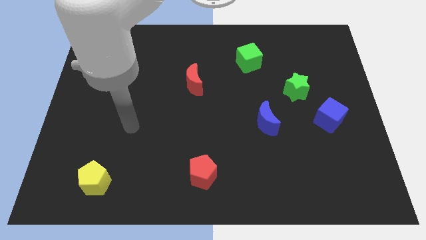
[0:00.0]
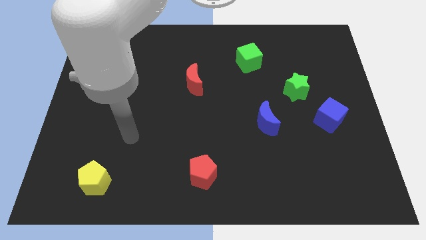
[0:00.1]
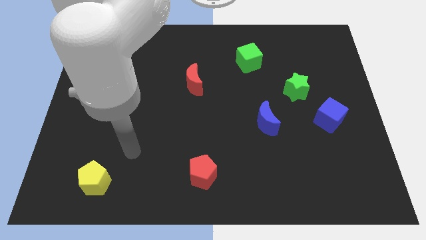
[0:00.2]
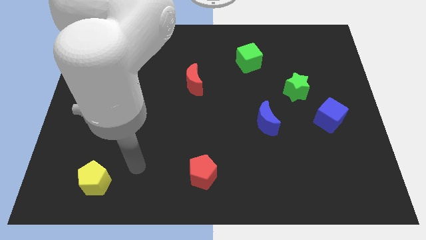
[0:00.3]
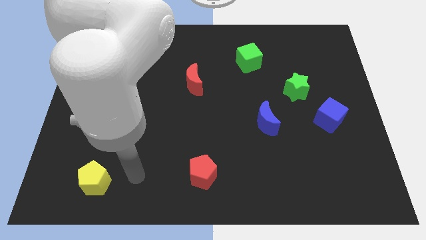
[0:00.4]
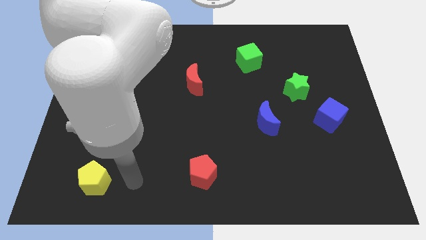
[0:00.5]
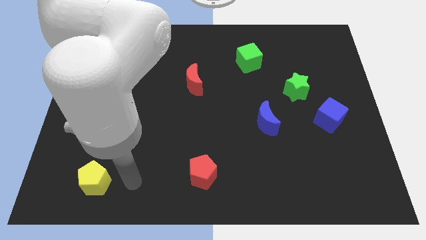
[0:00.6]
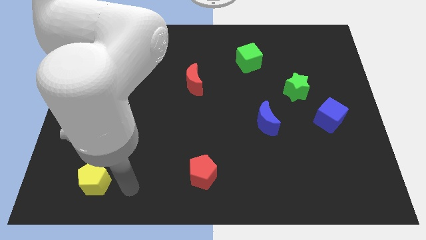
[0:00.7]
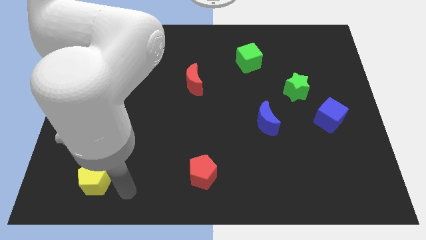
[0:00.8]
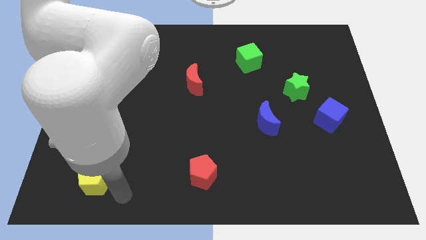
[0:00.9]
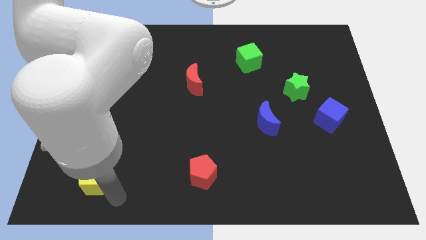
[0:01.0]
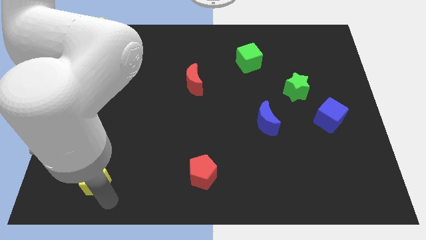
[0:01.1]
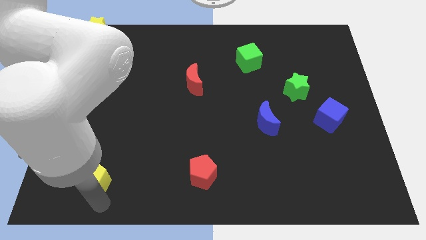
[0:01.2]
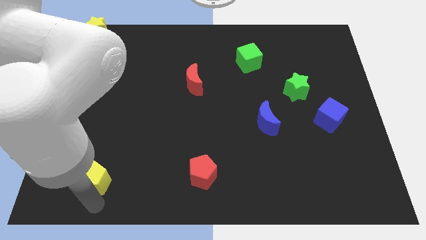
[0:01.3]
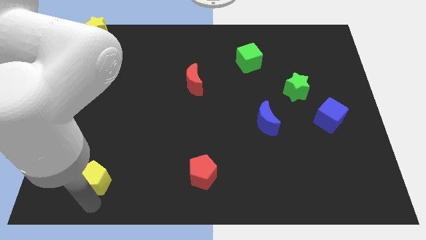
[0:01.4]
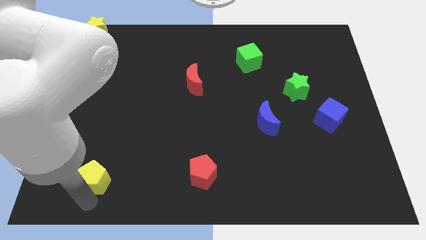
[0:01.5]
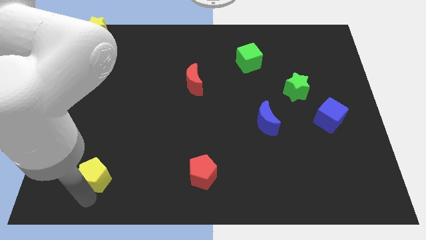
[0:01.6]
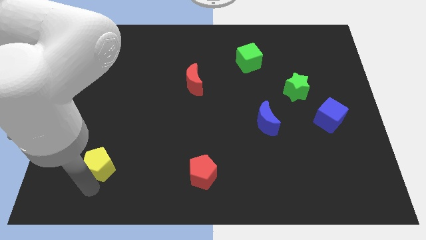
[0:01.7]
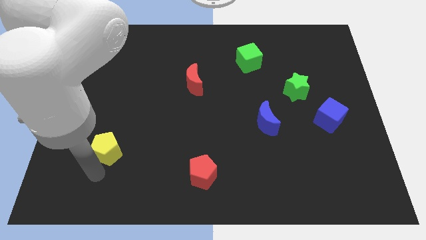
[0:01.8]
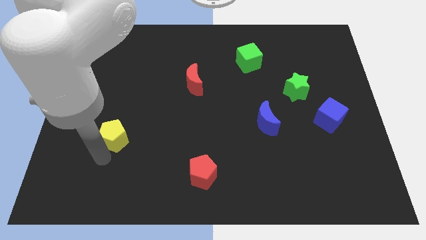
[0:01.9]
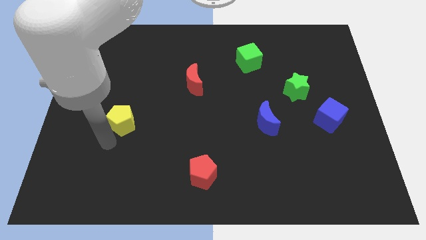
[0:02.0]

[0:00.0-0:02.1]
push yellow pentagon upwards of the board

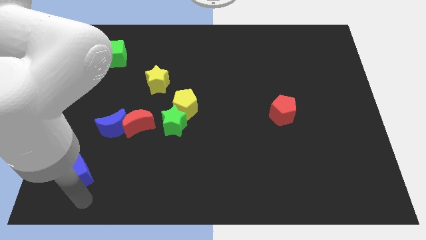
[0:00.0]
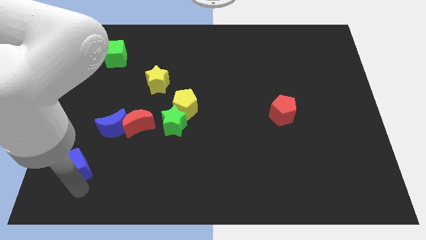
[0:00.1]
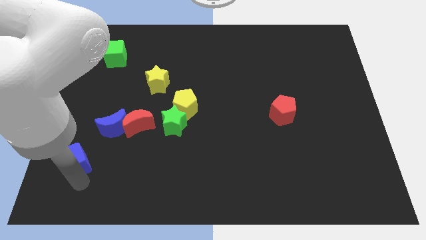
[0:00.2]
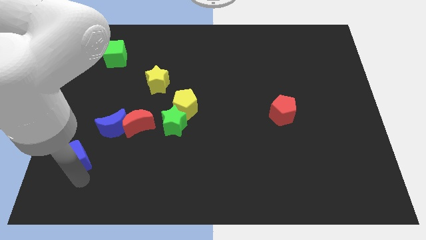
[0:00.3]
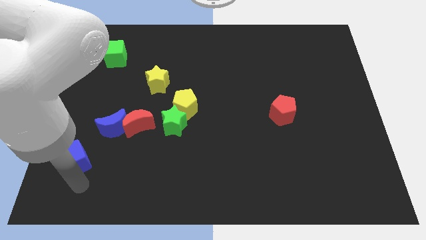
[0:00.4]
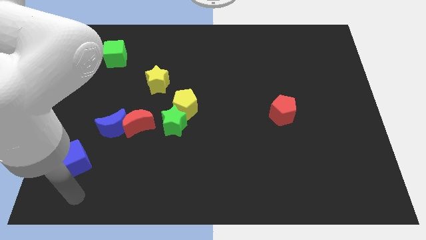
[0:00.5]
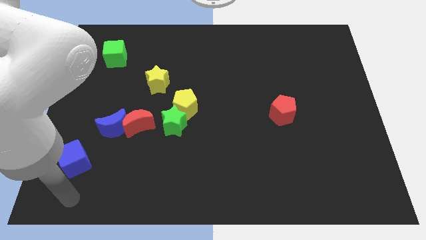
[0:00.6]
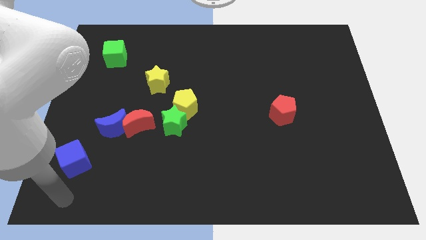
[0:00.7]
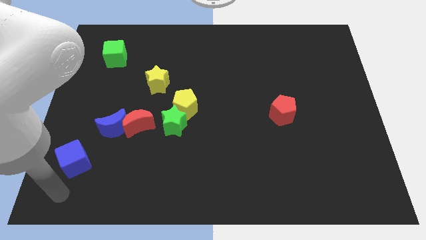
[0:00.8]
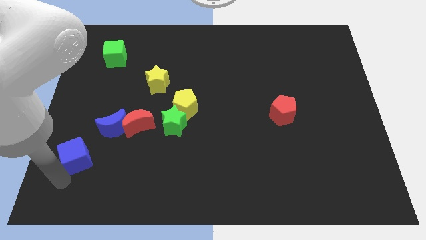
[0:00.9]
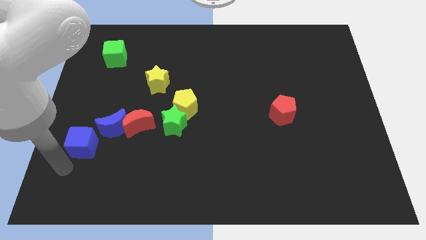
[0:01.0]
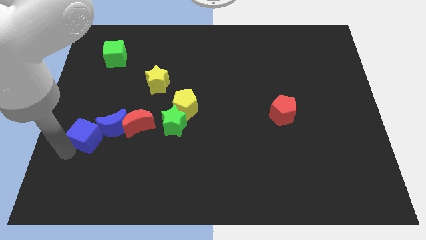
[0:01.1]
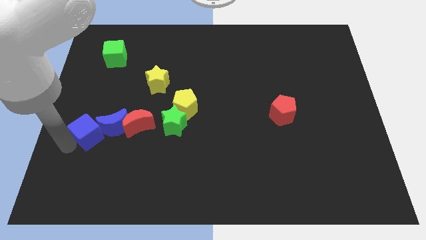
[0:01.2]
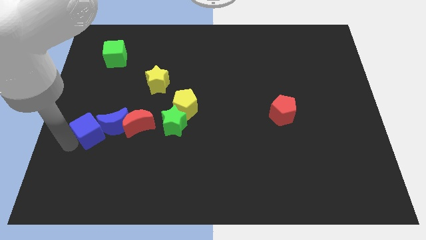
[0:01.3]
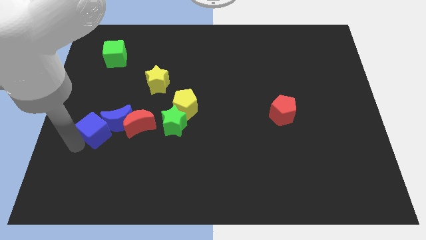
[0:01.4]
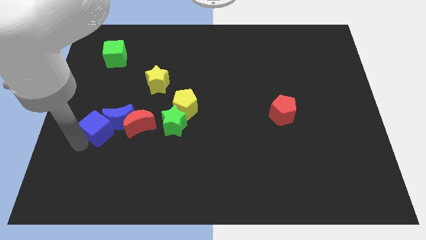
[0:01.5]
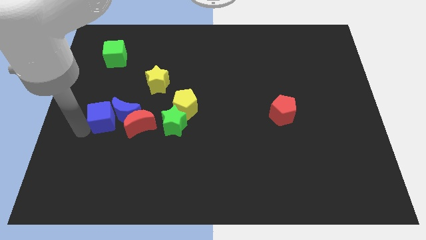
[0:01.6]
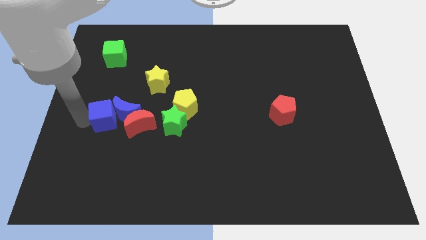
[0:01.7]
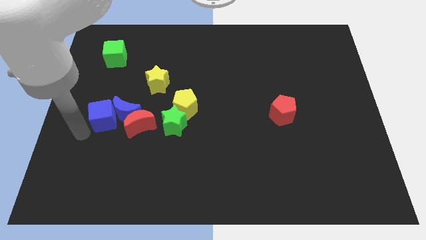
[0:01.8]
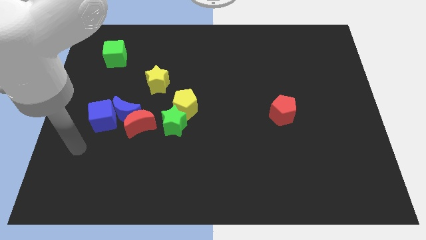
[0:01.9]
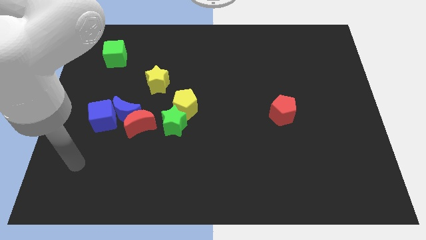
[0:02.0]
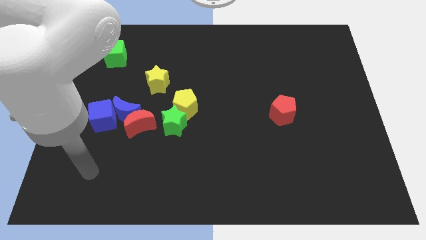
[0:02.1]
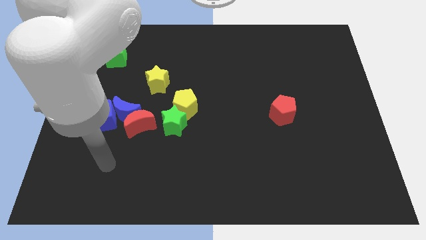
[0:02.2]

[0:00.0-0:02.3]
move blue cube into the blue moon

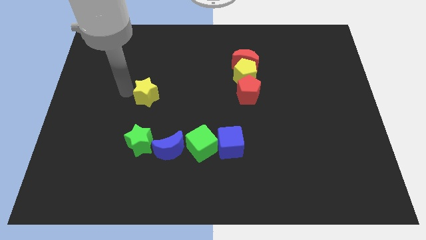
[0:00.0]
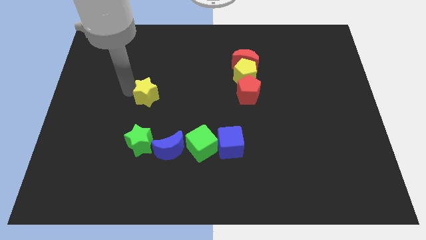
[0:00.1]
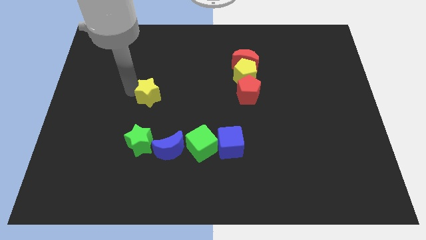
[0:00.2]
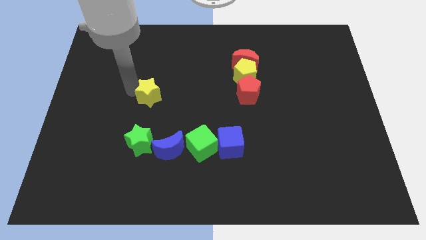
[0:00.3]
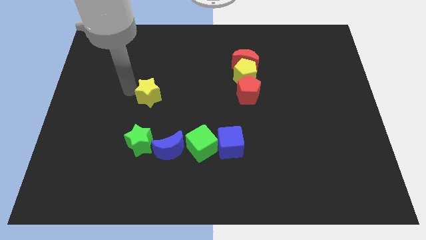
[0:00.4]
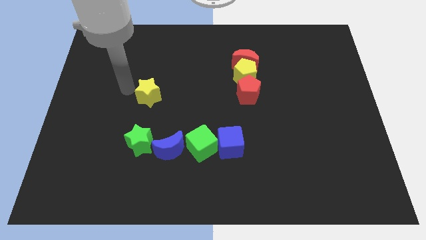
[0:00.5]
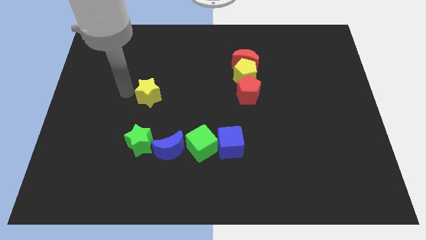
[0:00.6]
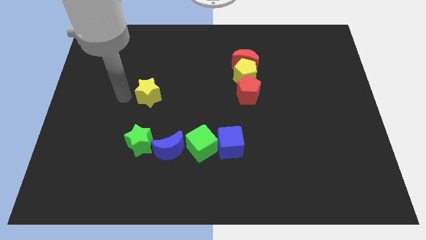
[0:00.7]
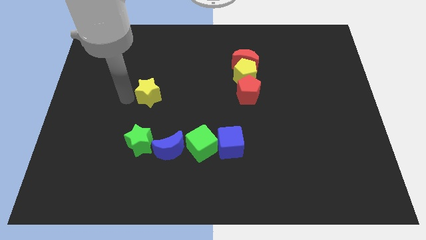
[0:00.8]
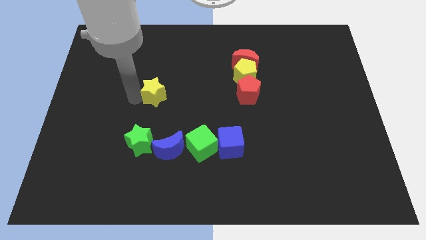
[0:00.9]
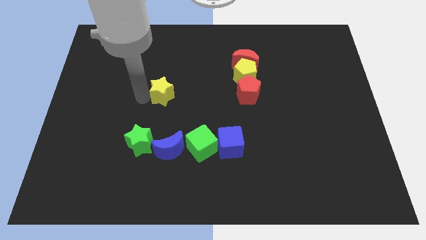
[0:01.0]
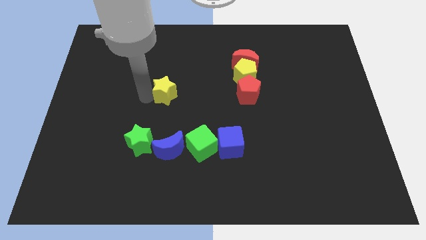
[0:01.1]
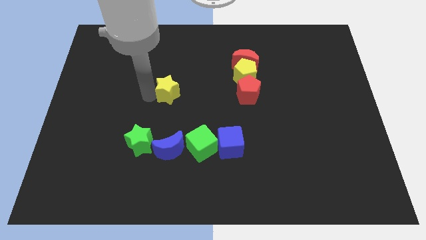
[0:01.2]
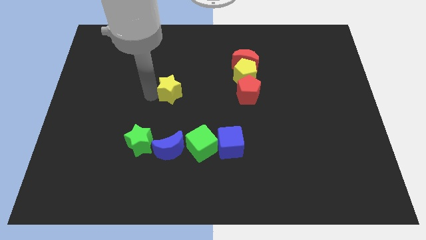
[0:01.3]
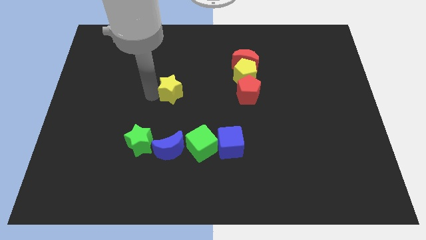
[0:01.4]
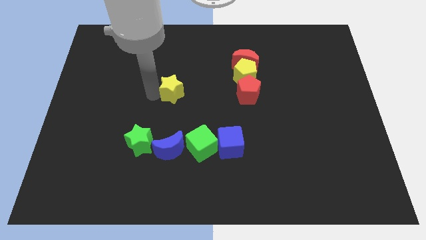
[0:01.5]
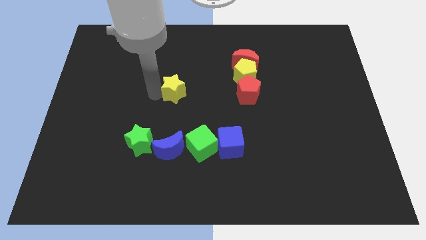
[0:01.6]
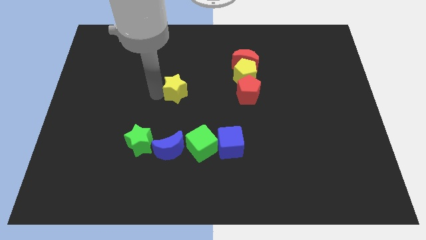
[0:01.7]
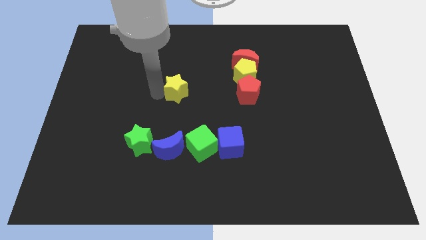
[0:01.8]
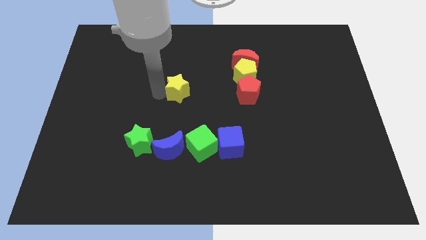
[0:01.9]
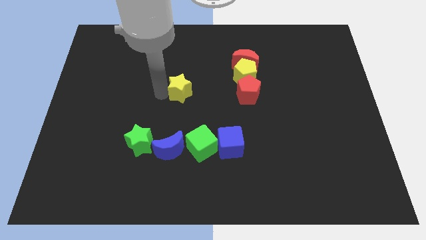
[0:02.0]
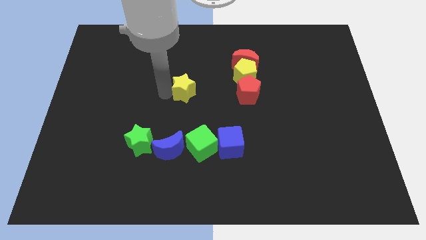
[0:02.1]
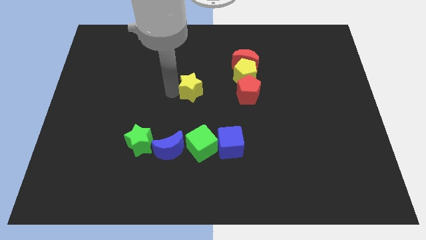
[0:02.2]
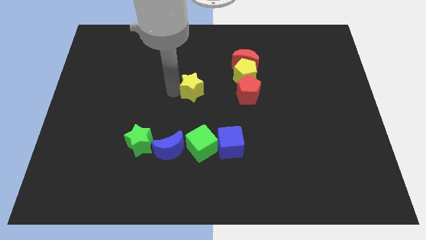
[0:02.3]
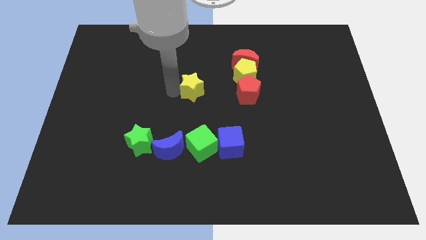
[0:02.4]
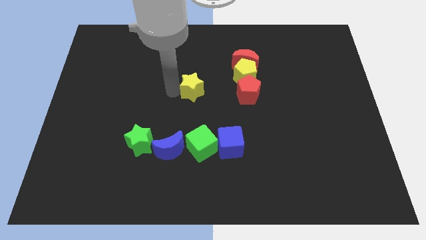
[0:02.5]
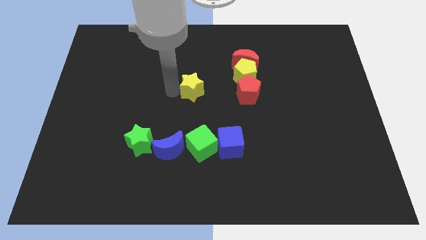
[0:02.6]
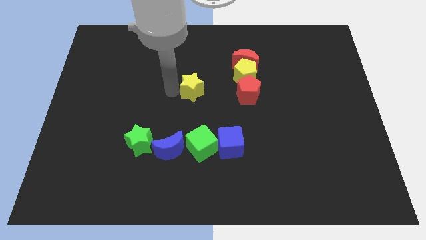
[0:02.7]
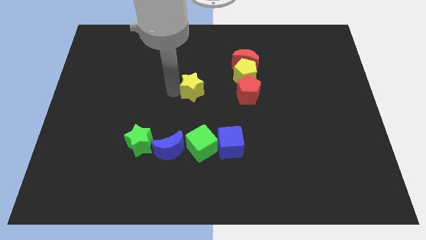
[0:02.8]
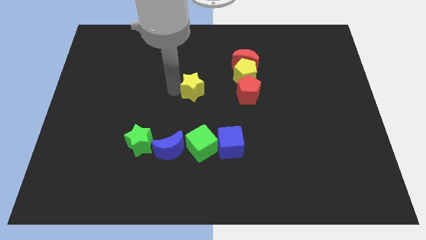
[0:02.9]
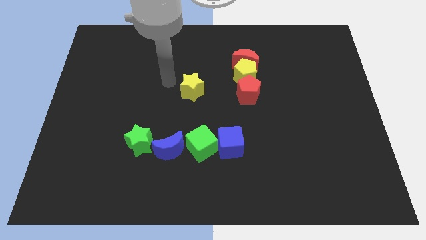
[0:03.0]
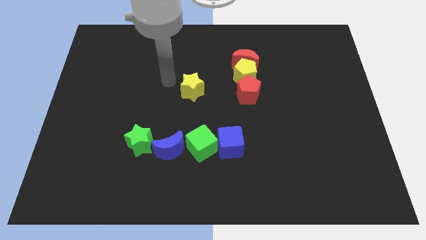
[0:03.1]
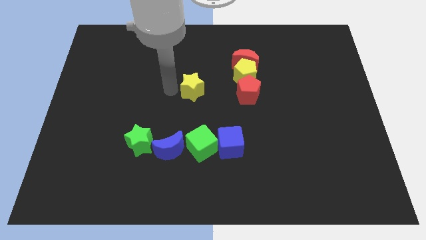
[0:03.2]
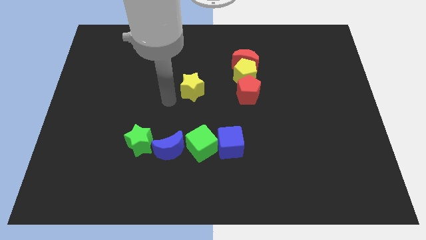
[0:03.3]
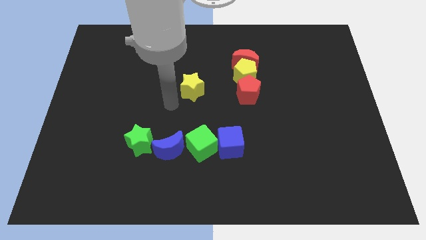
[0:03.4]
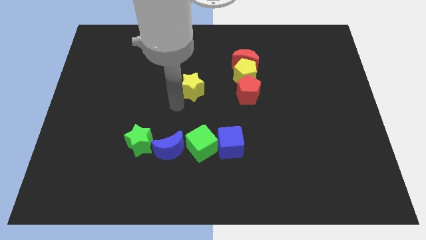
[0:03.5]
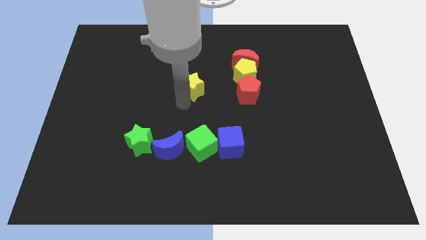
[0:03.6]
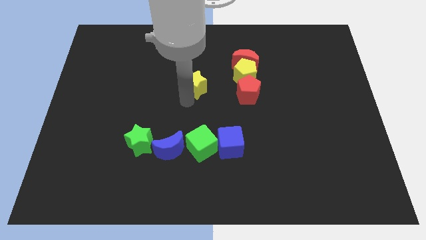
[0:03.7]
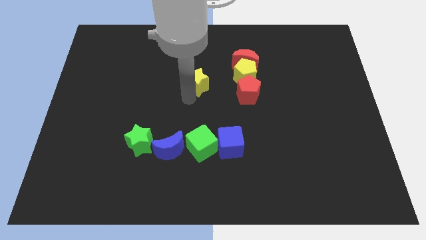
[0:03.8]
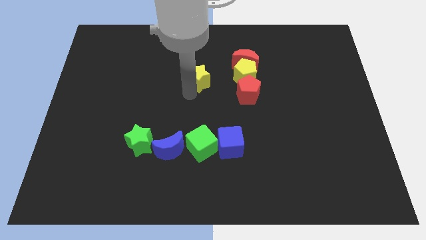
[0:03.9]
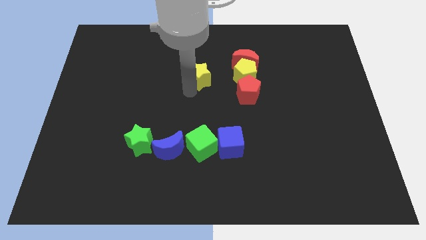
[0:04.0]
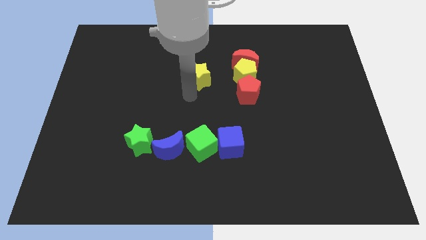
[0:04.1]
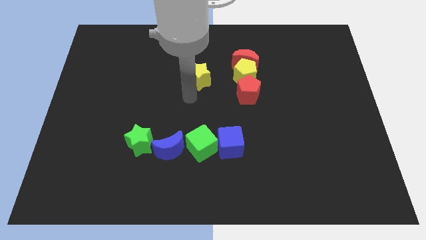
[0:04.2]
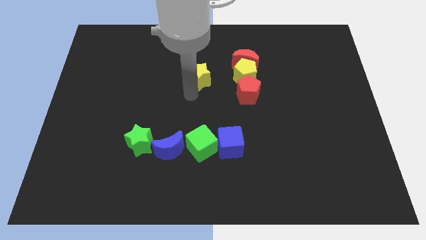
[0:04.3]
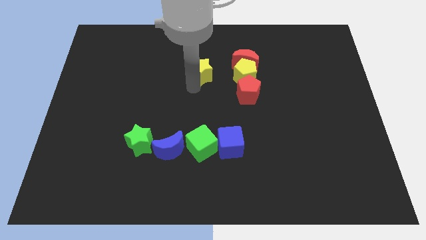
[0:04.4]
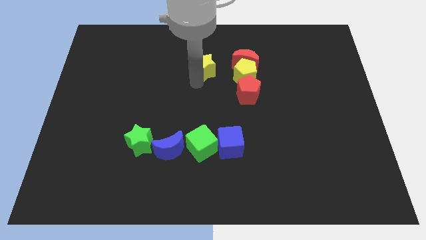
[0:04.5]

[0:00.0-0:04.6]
place the yellow star vertically above the green cube

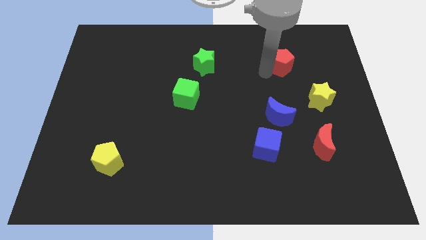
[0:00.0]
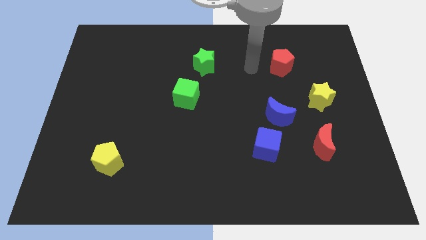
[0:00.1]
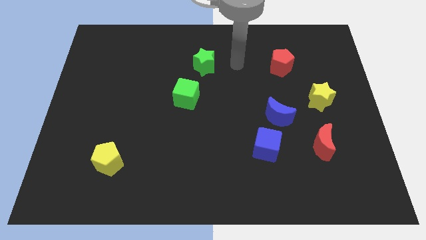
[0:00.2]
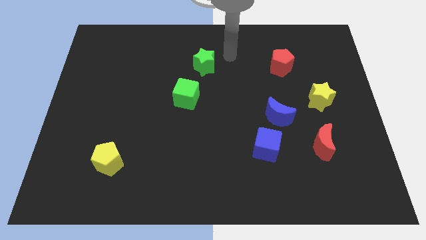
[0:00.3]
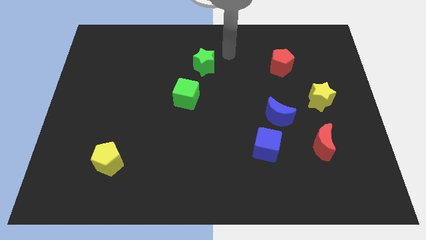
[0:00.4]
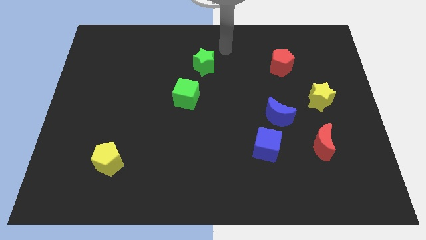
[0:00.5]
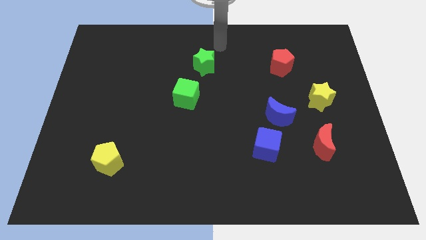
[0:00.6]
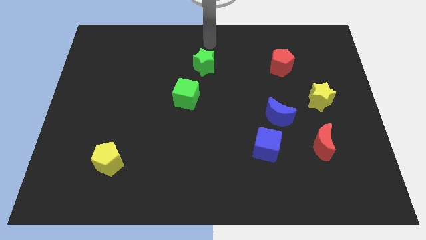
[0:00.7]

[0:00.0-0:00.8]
move the arm away from the red pentagon
